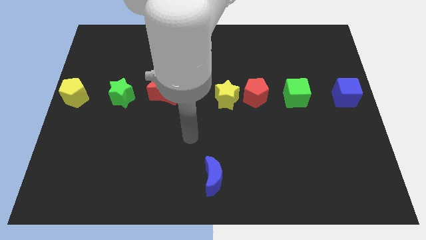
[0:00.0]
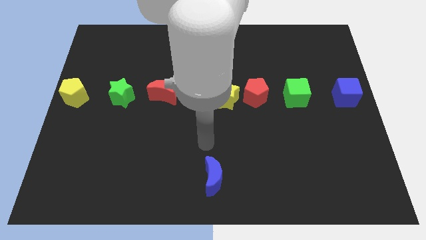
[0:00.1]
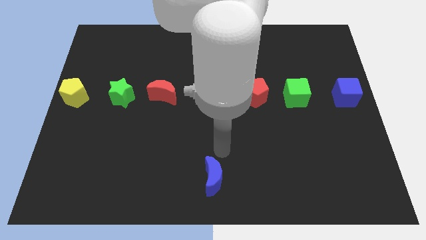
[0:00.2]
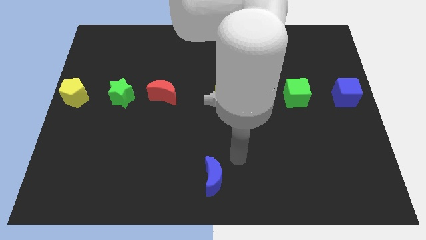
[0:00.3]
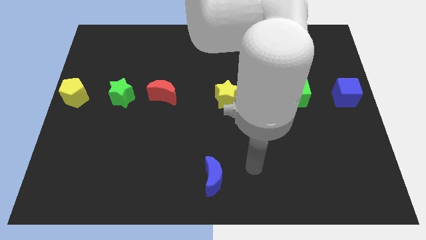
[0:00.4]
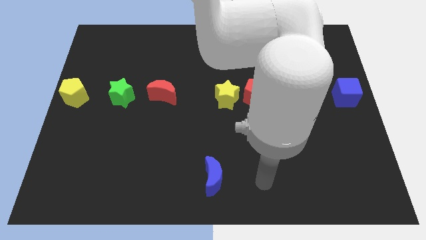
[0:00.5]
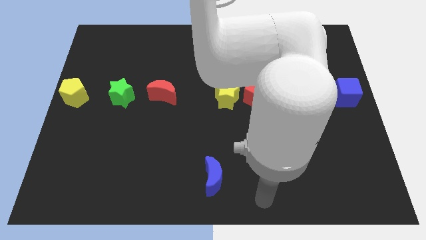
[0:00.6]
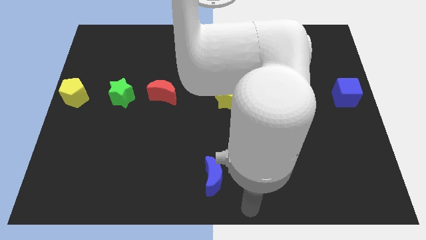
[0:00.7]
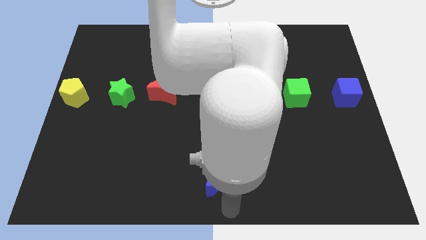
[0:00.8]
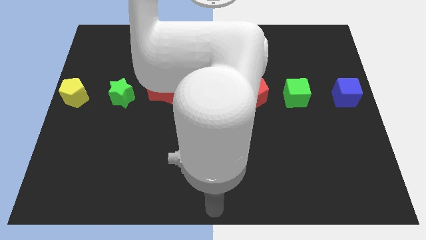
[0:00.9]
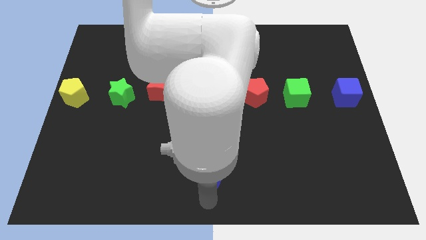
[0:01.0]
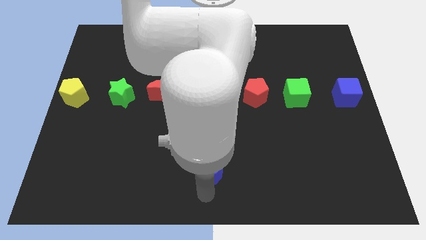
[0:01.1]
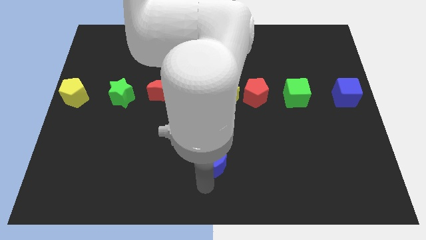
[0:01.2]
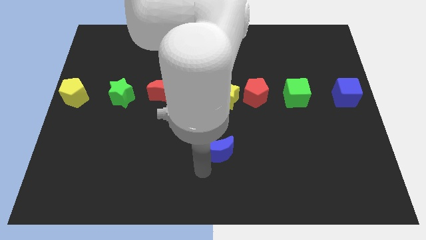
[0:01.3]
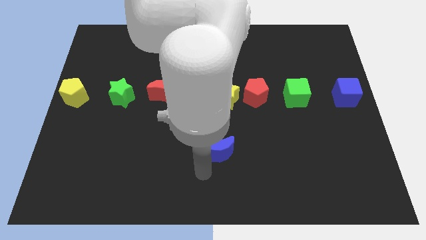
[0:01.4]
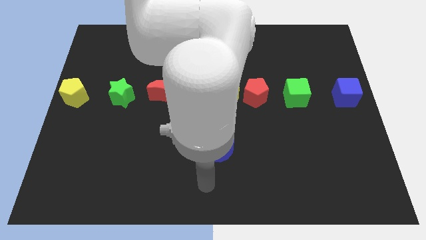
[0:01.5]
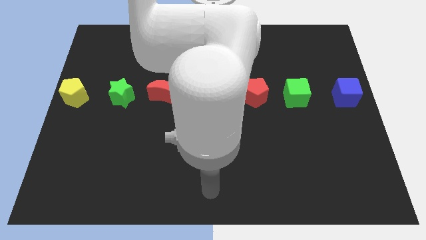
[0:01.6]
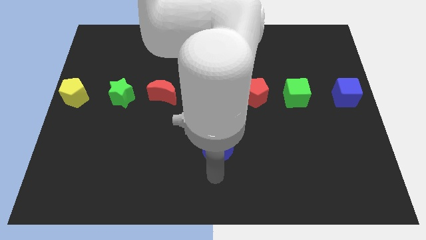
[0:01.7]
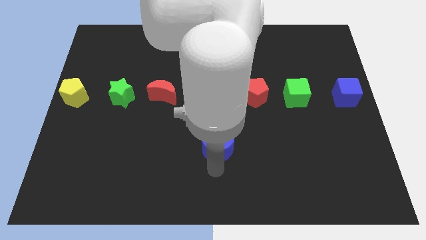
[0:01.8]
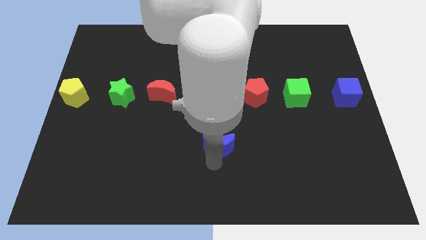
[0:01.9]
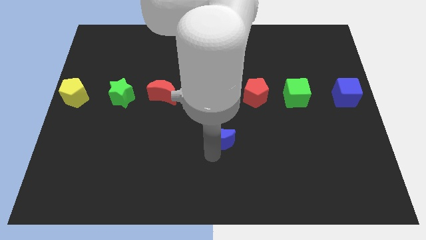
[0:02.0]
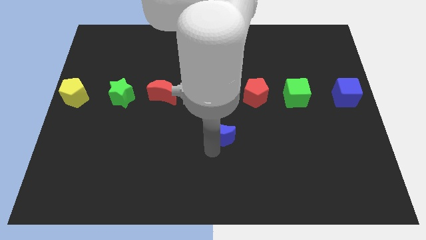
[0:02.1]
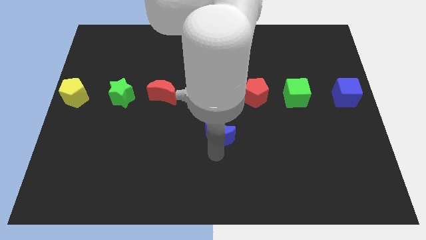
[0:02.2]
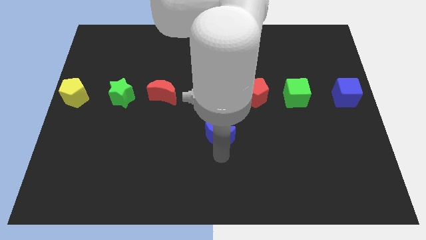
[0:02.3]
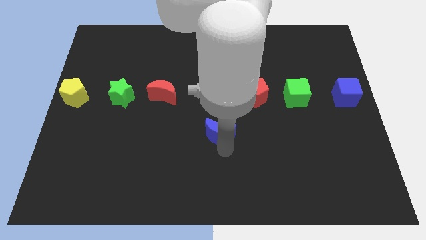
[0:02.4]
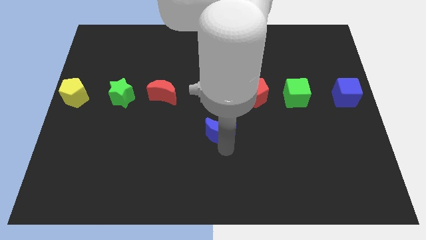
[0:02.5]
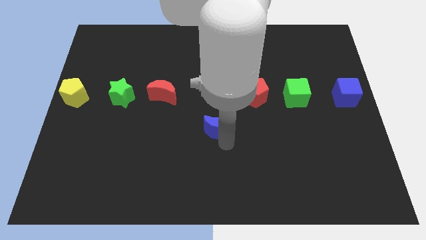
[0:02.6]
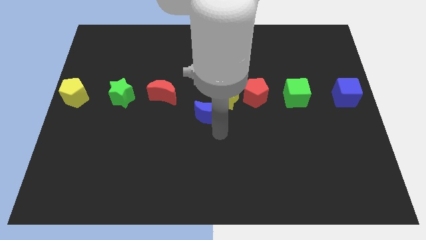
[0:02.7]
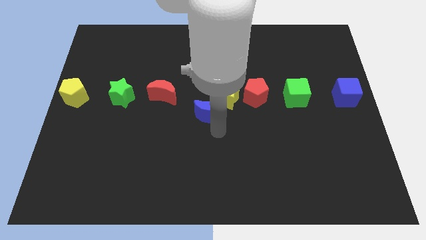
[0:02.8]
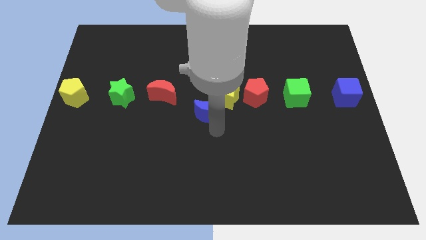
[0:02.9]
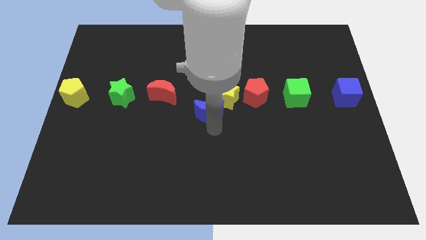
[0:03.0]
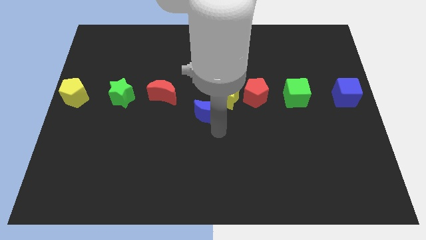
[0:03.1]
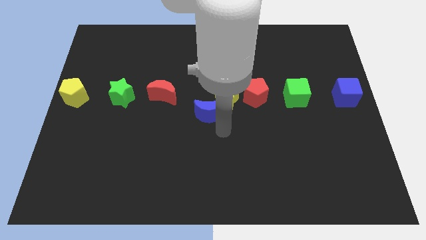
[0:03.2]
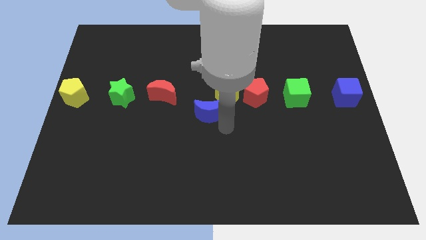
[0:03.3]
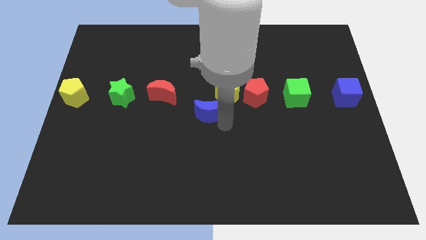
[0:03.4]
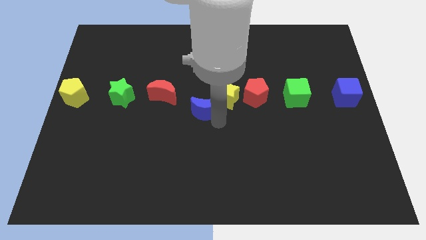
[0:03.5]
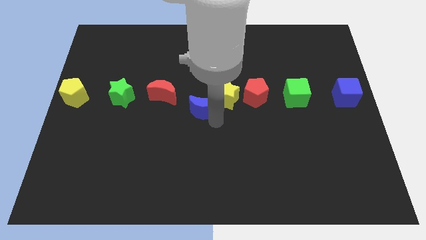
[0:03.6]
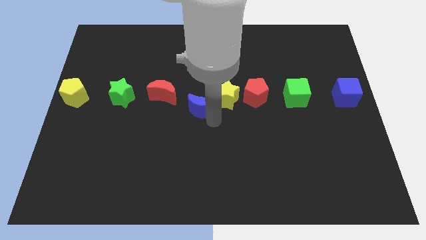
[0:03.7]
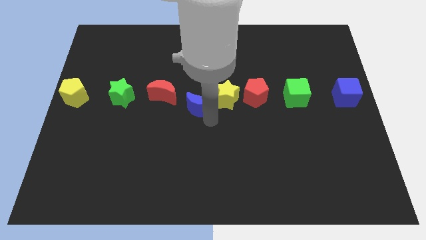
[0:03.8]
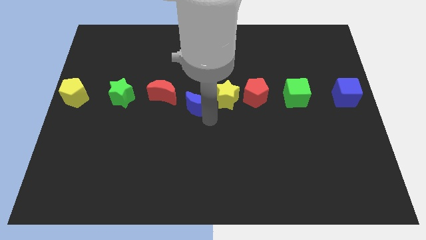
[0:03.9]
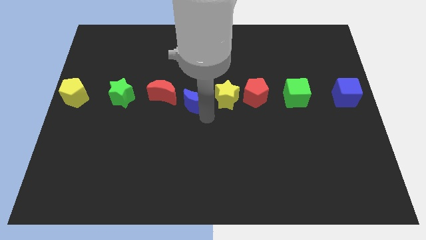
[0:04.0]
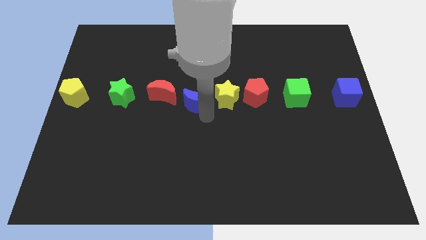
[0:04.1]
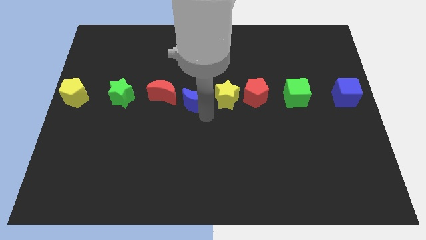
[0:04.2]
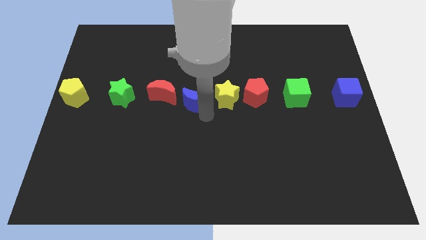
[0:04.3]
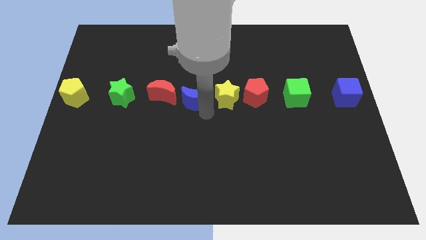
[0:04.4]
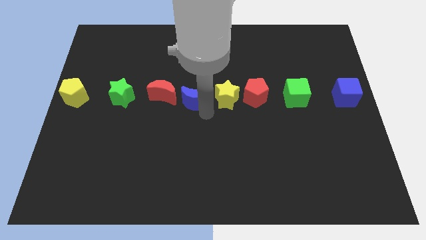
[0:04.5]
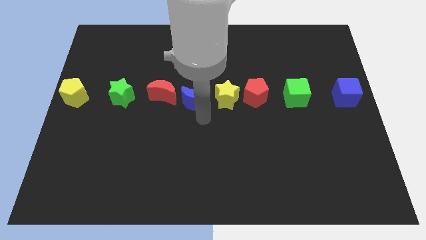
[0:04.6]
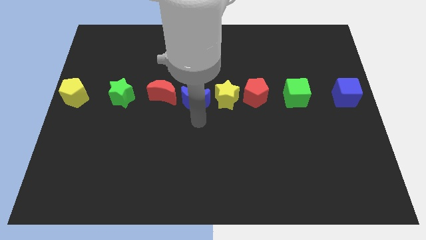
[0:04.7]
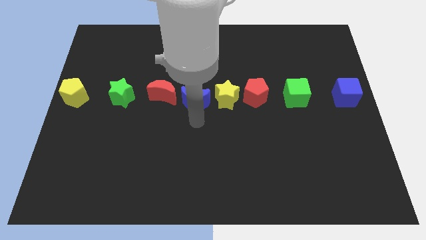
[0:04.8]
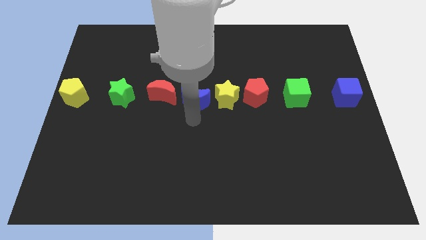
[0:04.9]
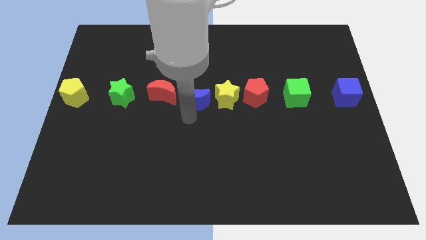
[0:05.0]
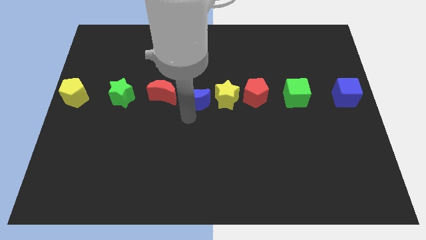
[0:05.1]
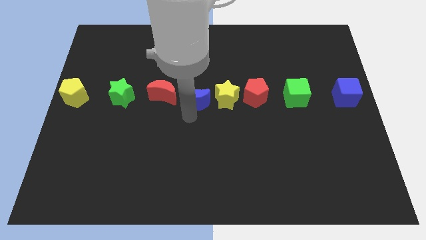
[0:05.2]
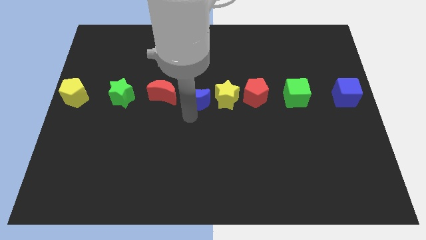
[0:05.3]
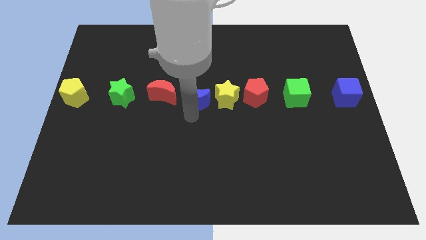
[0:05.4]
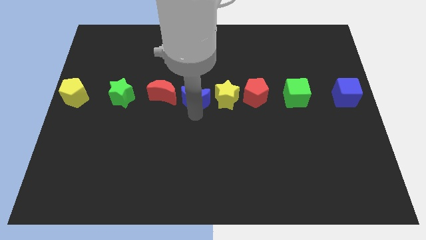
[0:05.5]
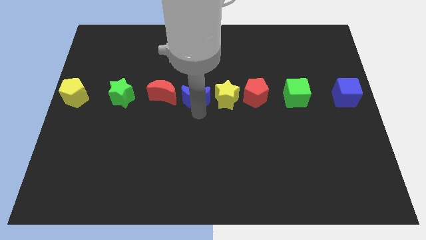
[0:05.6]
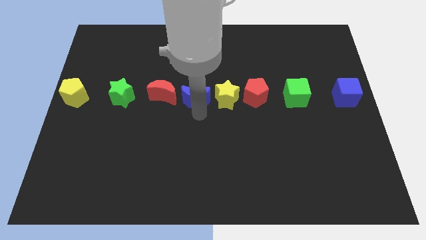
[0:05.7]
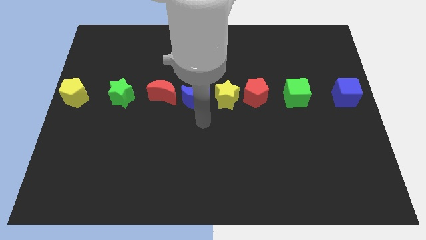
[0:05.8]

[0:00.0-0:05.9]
move blue crescent in between the red crescent and yellow star

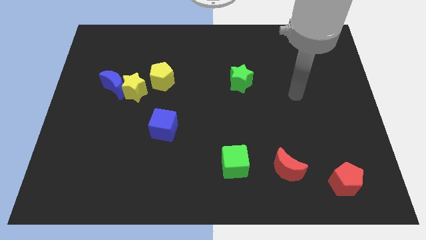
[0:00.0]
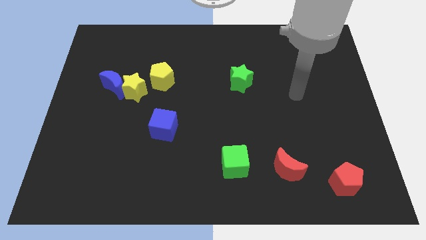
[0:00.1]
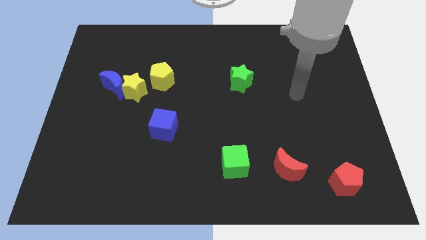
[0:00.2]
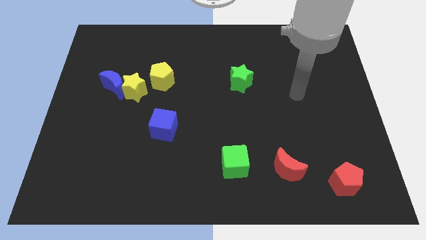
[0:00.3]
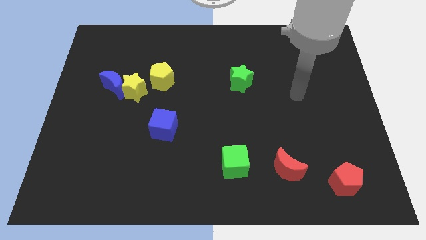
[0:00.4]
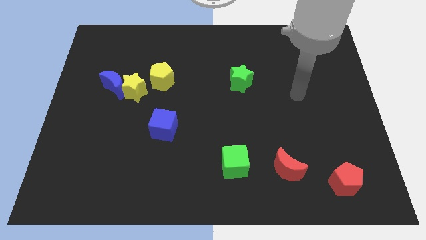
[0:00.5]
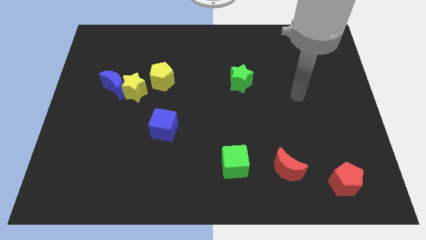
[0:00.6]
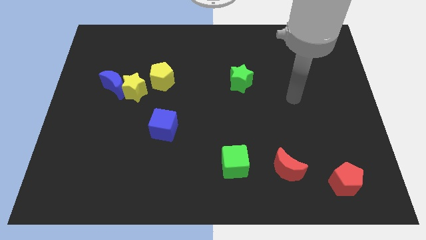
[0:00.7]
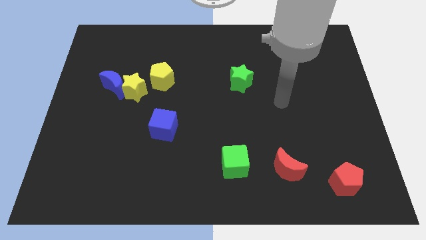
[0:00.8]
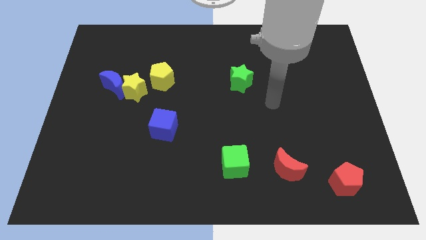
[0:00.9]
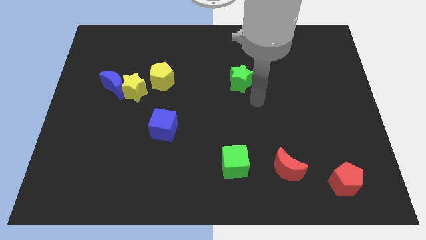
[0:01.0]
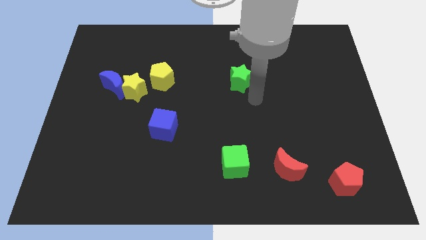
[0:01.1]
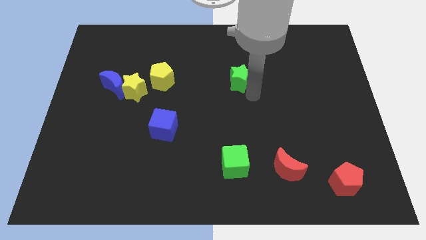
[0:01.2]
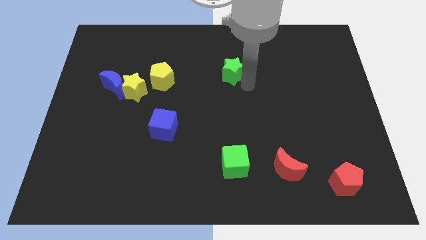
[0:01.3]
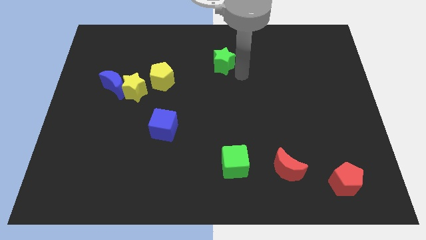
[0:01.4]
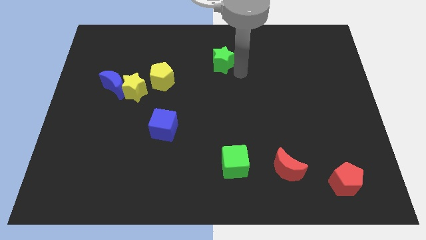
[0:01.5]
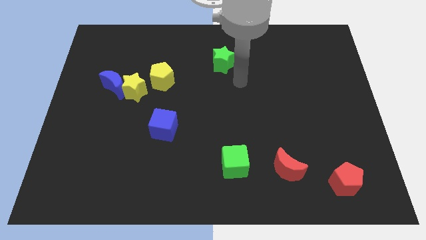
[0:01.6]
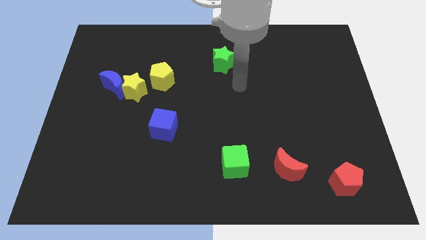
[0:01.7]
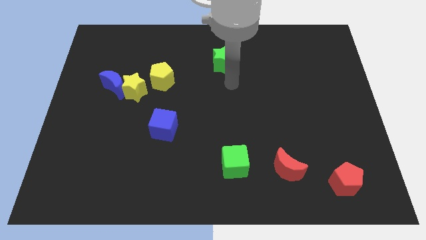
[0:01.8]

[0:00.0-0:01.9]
push the green star towards the top center

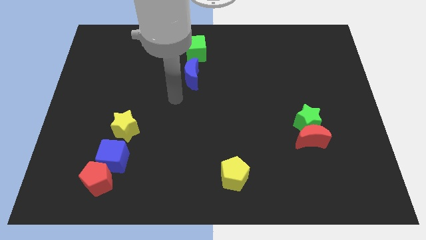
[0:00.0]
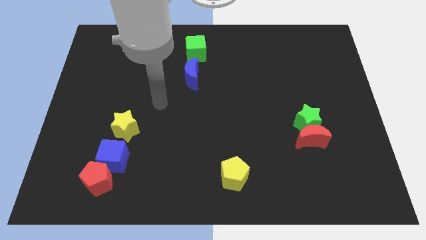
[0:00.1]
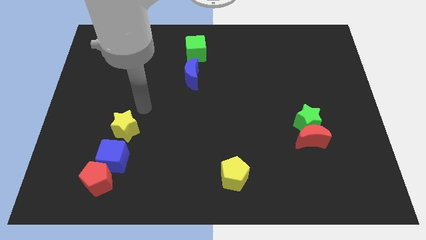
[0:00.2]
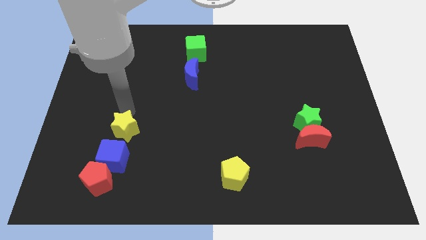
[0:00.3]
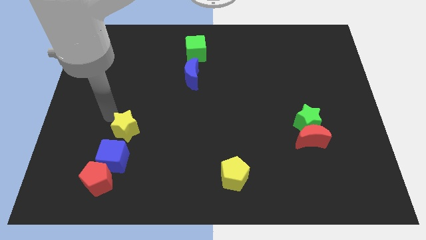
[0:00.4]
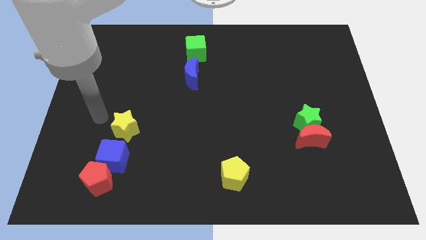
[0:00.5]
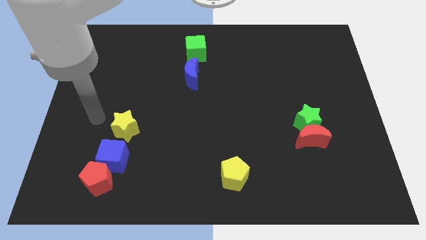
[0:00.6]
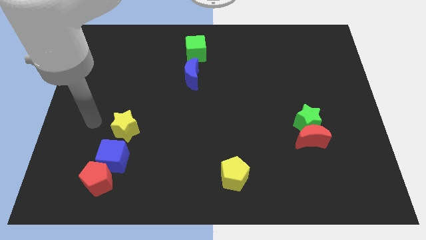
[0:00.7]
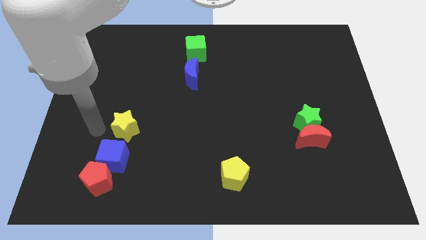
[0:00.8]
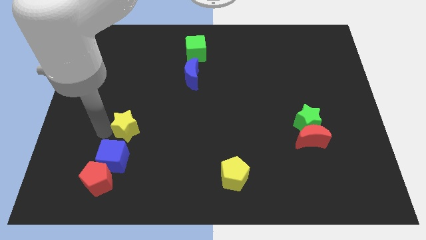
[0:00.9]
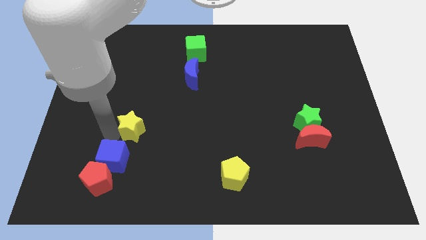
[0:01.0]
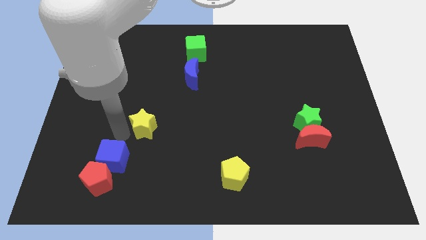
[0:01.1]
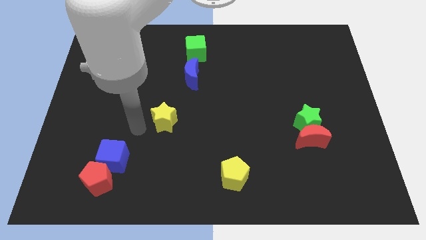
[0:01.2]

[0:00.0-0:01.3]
push the yellow star to the bottom left of the blue crescent
